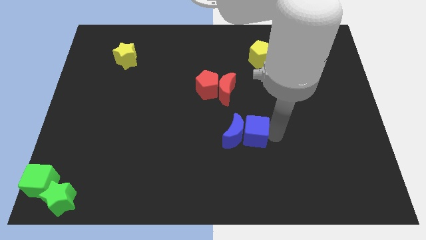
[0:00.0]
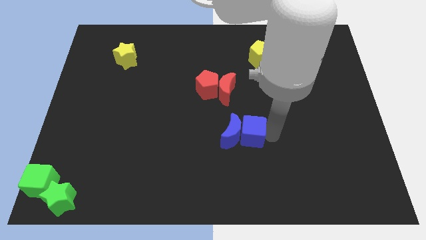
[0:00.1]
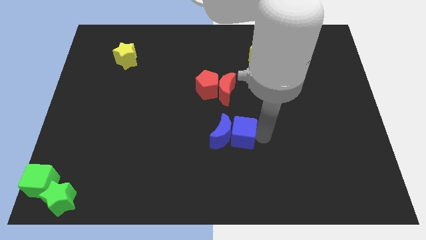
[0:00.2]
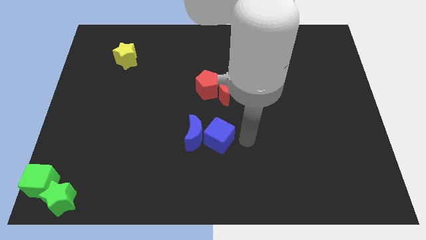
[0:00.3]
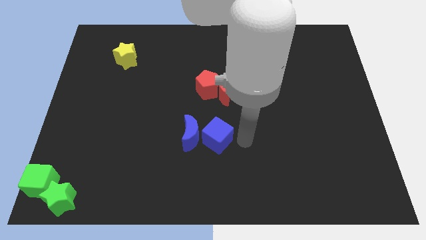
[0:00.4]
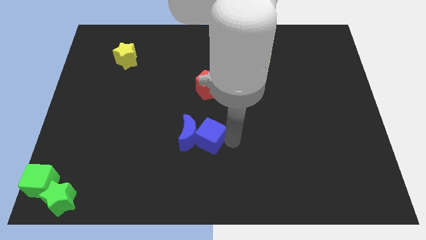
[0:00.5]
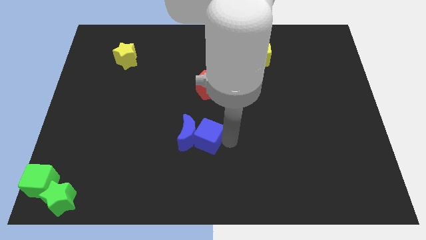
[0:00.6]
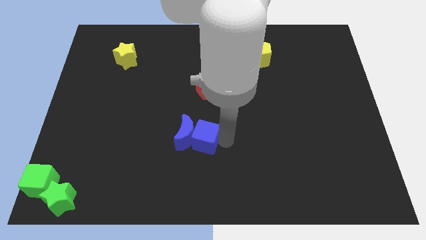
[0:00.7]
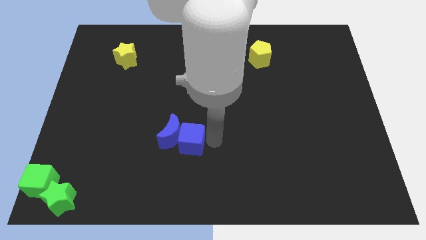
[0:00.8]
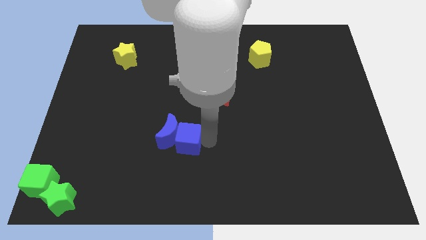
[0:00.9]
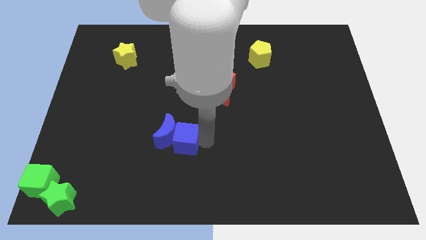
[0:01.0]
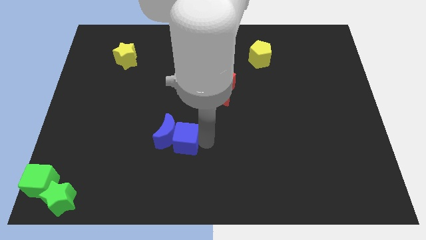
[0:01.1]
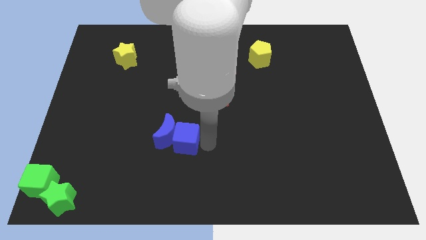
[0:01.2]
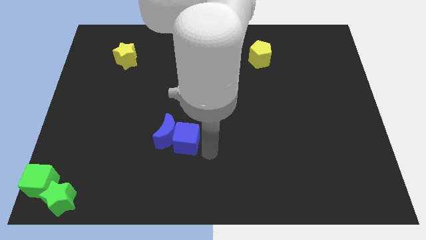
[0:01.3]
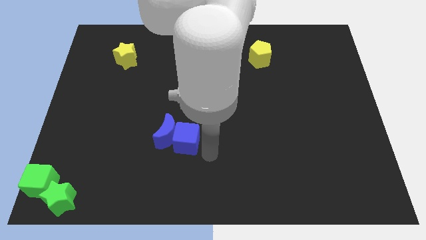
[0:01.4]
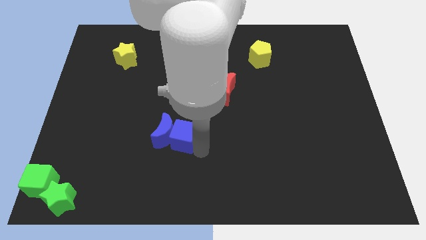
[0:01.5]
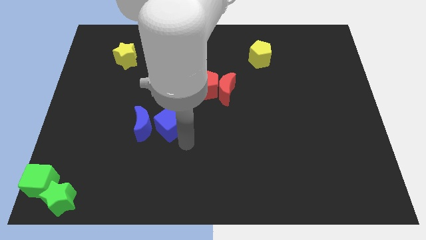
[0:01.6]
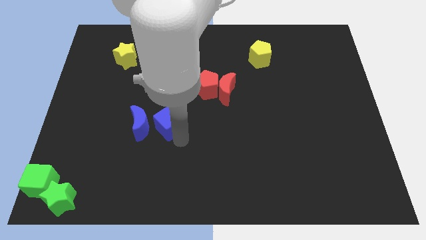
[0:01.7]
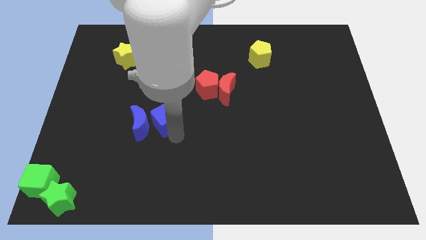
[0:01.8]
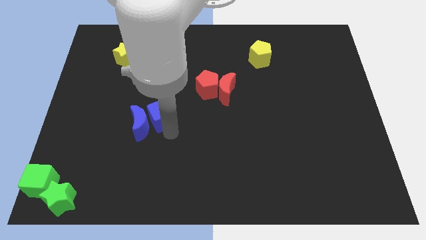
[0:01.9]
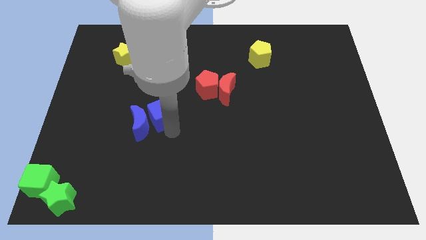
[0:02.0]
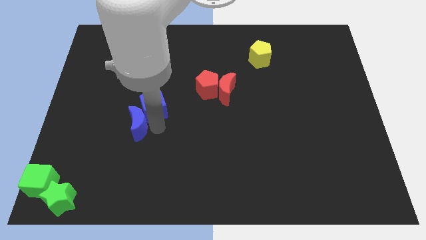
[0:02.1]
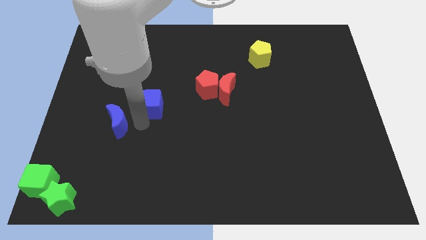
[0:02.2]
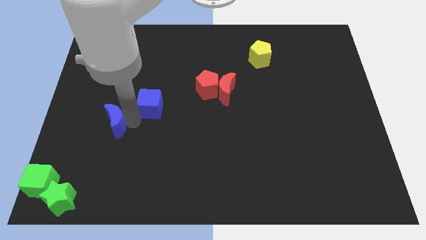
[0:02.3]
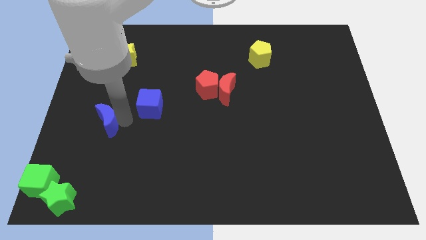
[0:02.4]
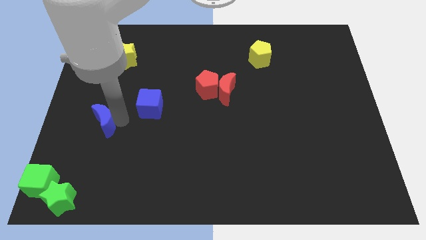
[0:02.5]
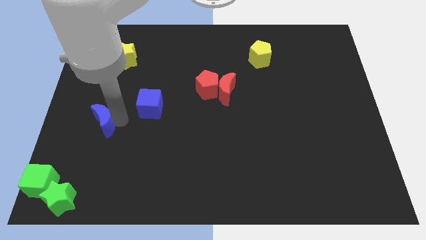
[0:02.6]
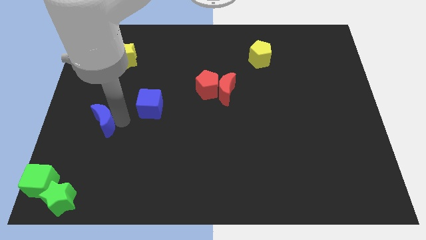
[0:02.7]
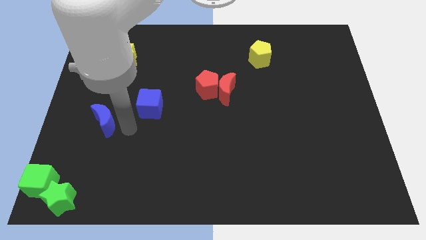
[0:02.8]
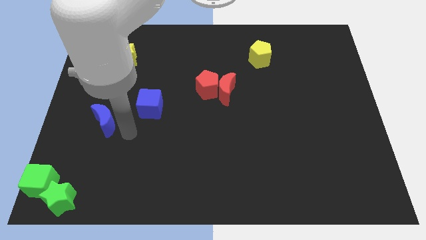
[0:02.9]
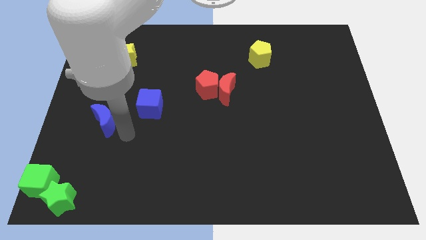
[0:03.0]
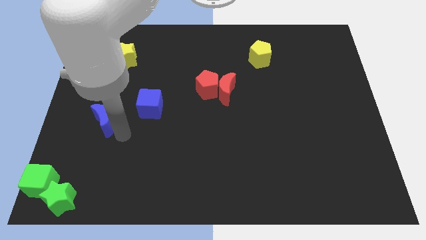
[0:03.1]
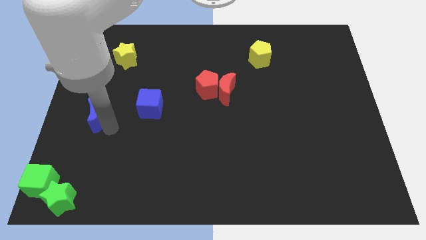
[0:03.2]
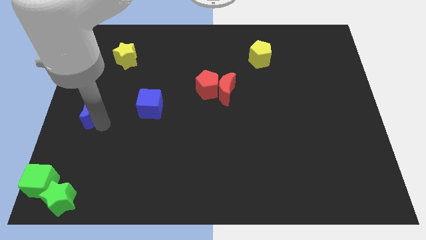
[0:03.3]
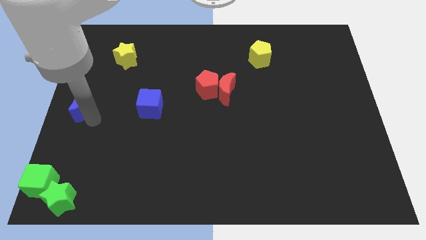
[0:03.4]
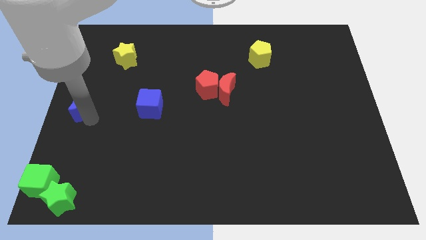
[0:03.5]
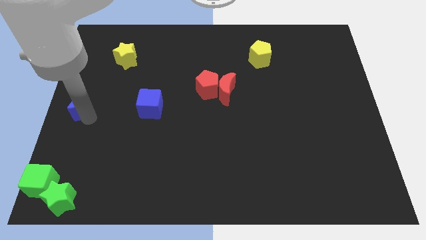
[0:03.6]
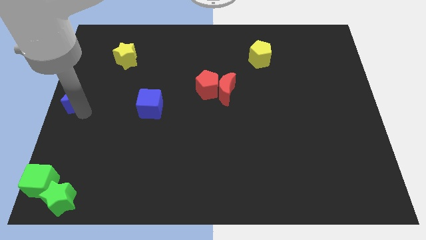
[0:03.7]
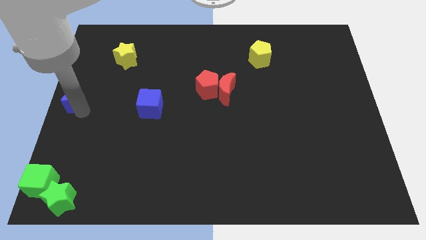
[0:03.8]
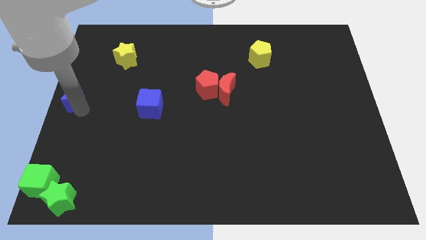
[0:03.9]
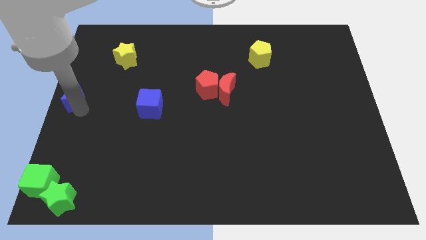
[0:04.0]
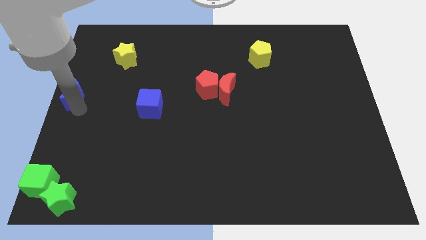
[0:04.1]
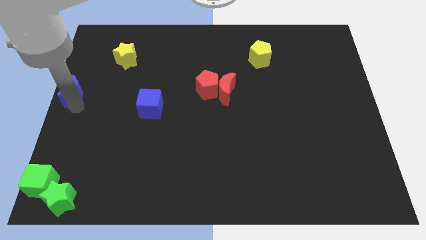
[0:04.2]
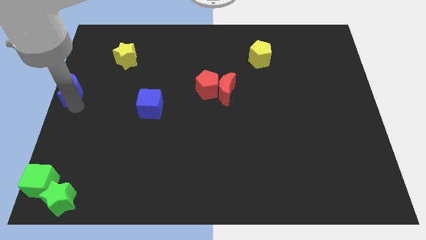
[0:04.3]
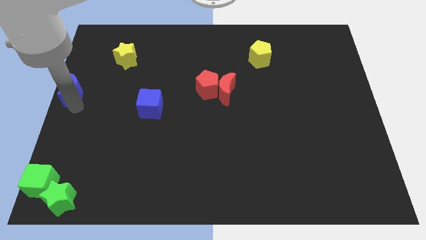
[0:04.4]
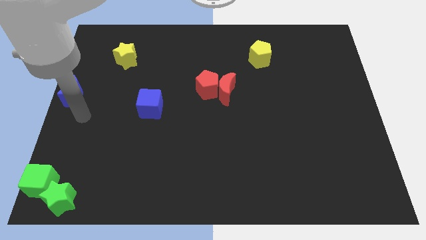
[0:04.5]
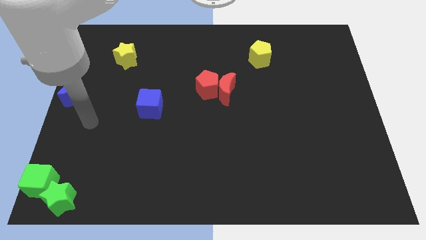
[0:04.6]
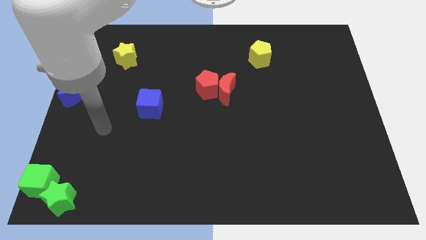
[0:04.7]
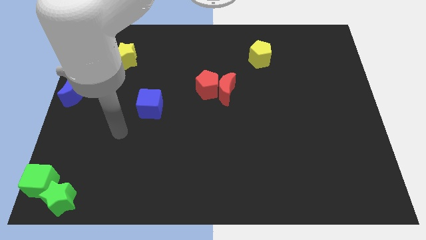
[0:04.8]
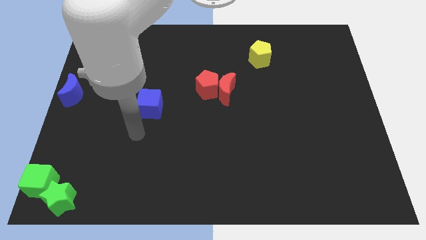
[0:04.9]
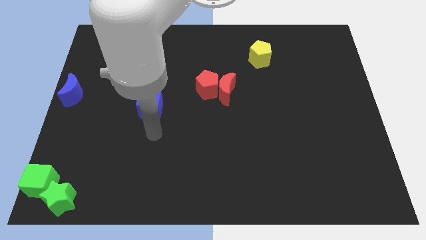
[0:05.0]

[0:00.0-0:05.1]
place the blue cube into the blue moon to the left center

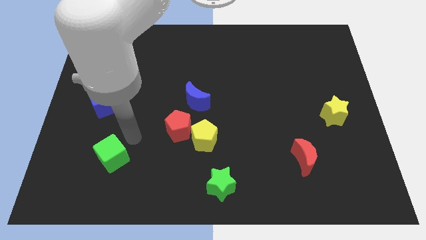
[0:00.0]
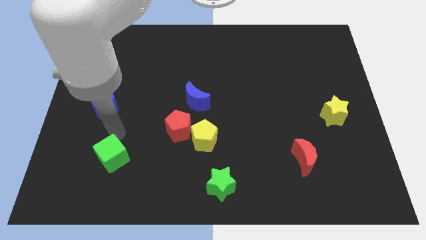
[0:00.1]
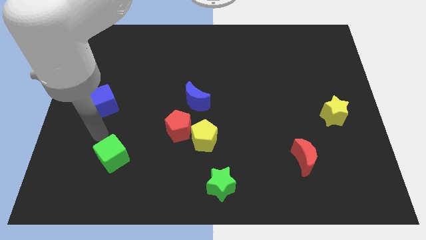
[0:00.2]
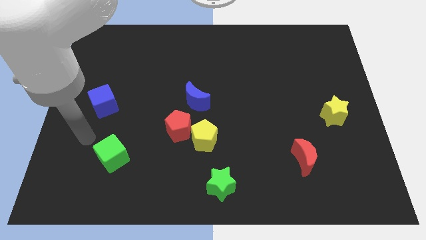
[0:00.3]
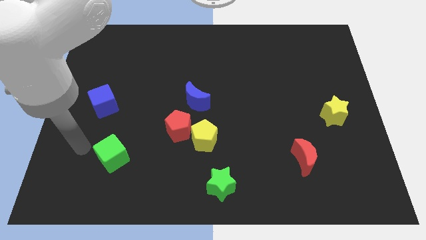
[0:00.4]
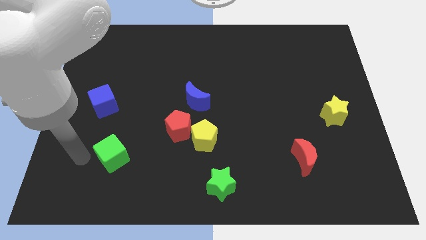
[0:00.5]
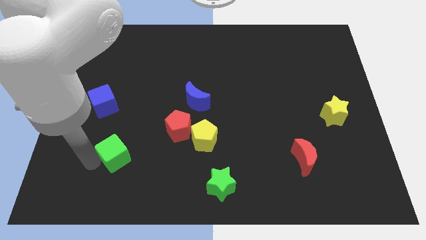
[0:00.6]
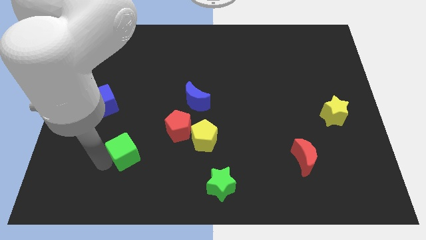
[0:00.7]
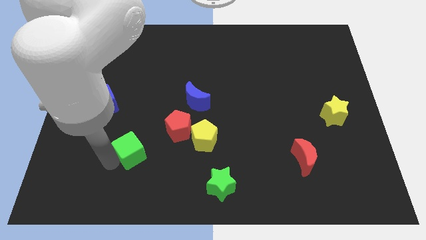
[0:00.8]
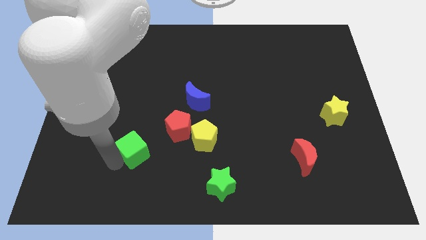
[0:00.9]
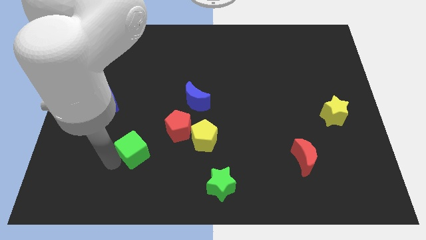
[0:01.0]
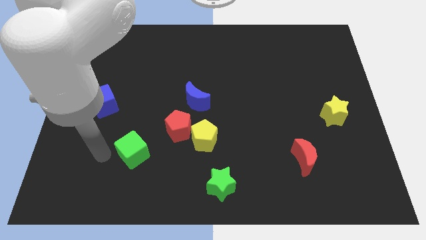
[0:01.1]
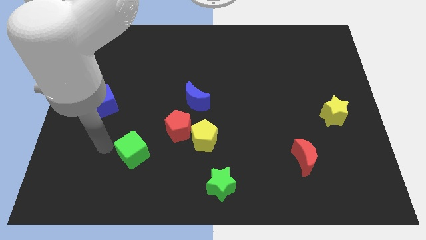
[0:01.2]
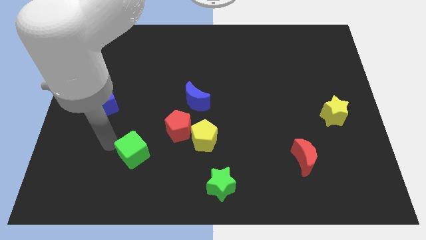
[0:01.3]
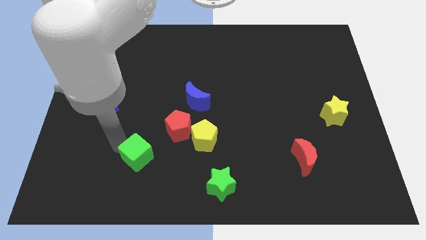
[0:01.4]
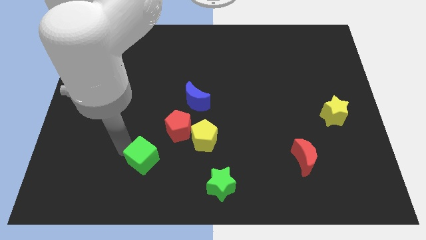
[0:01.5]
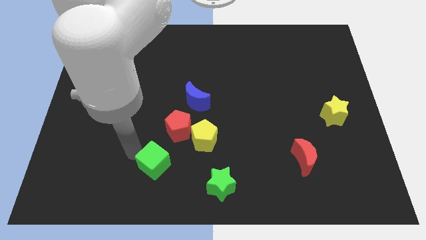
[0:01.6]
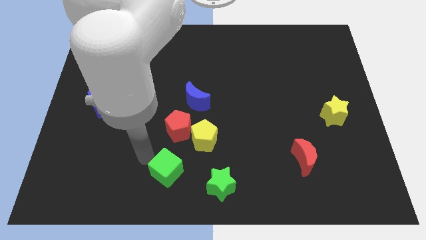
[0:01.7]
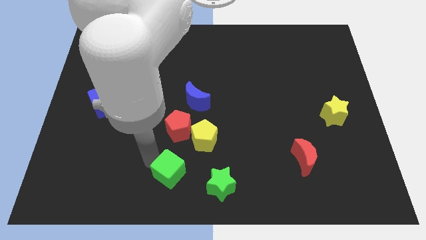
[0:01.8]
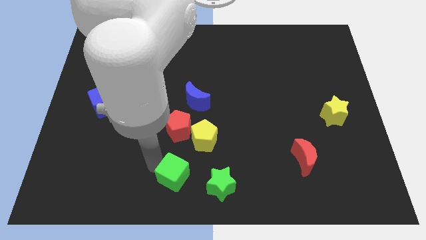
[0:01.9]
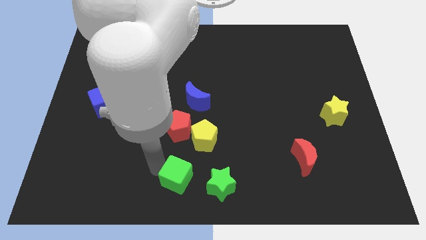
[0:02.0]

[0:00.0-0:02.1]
push the green cube towards the green star

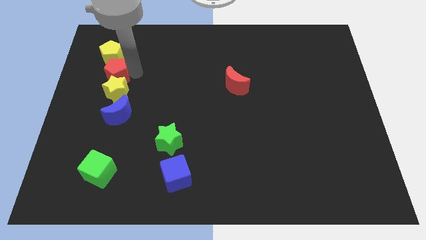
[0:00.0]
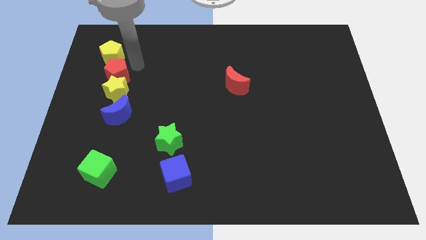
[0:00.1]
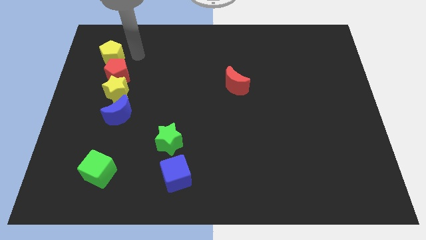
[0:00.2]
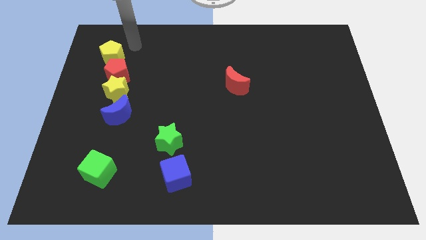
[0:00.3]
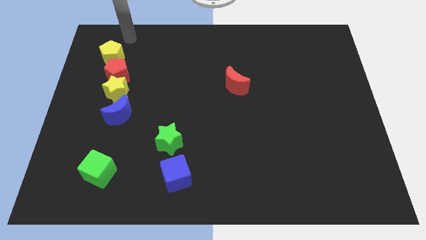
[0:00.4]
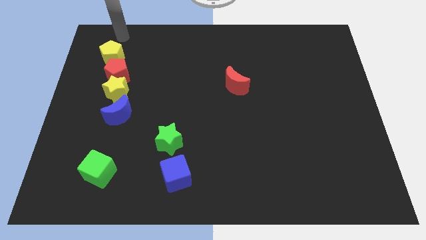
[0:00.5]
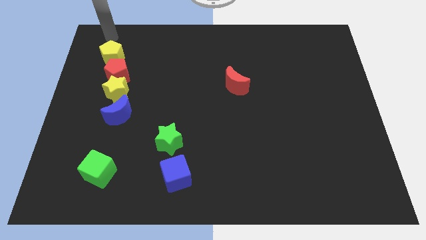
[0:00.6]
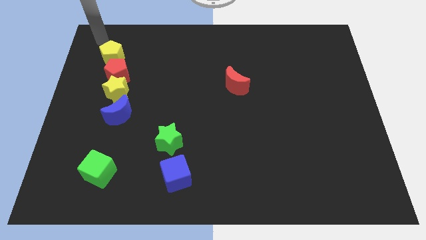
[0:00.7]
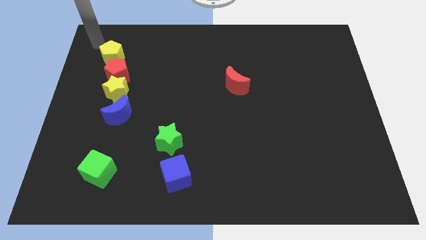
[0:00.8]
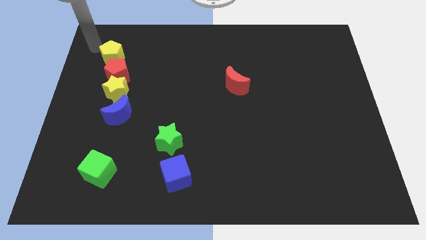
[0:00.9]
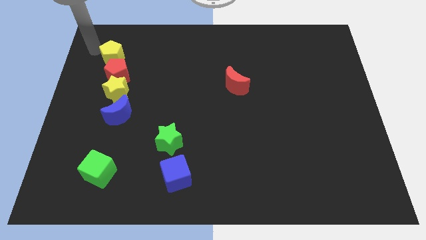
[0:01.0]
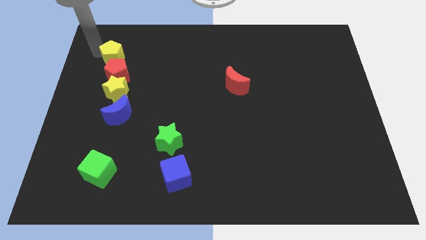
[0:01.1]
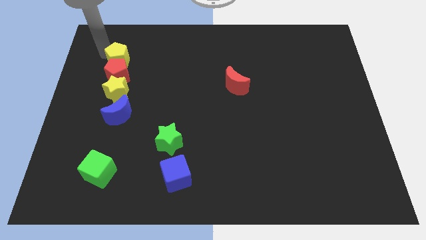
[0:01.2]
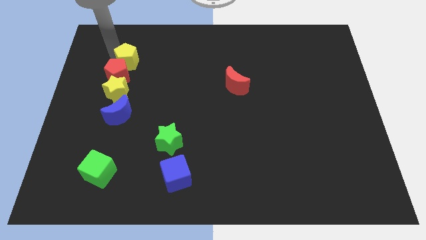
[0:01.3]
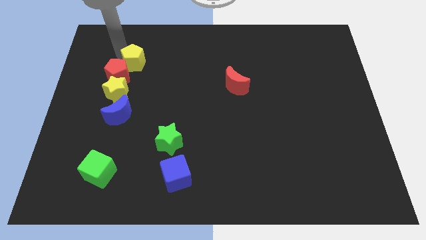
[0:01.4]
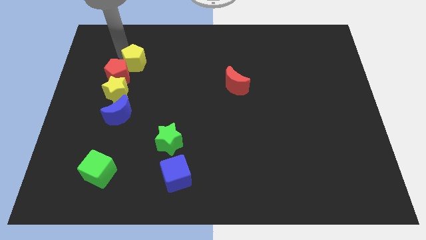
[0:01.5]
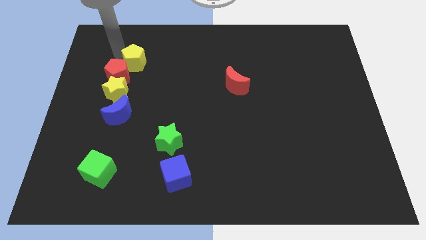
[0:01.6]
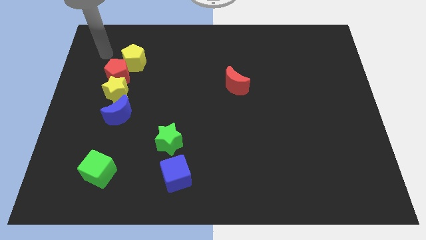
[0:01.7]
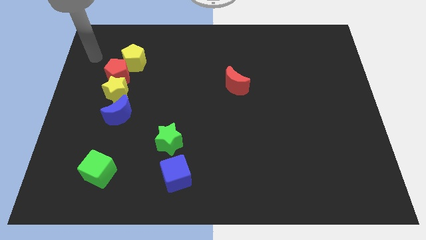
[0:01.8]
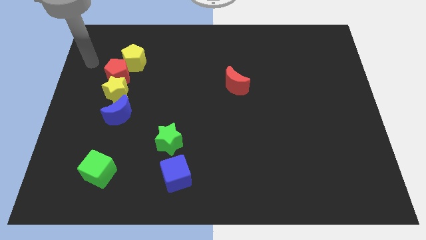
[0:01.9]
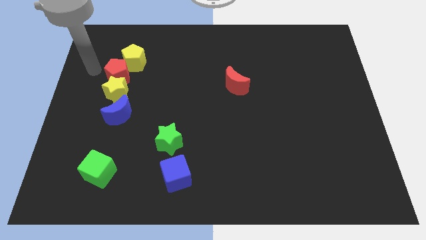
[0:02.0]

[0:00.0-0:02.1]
put the yellow pentagon at the top right side of the red pentagon
